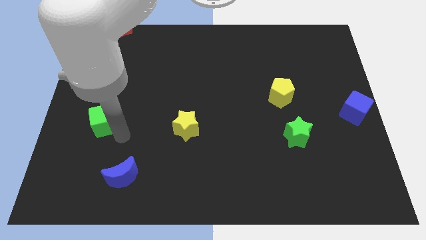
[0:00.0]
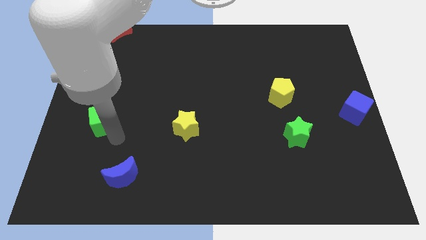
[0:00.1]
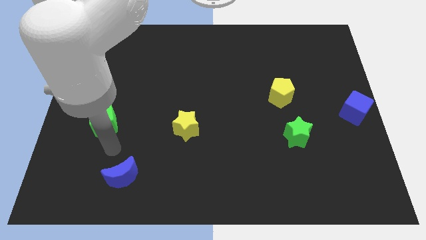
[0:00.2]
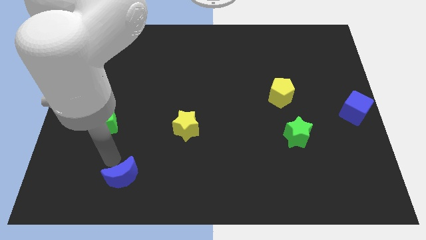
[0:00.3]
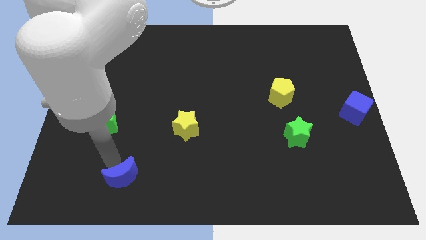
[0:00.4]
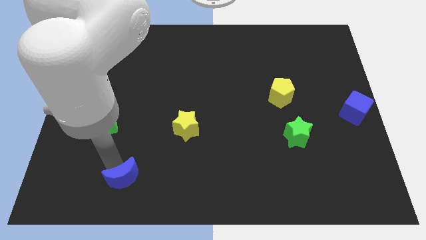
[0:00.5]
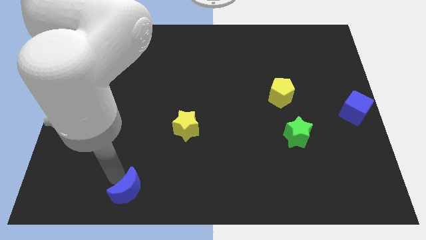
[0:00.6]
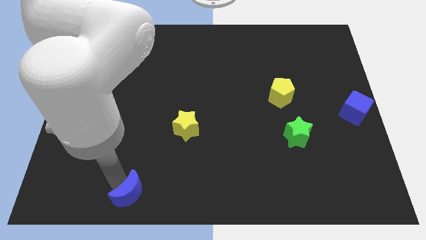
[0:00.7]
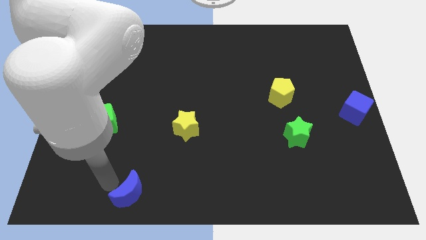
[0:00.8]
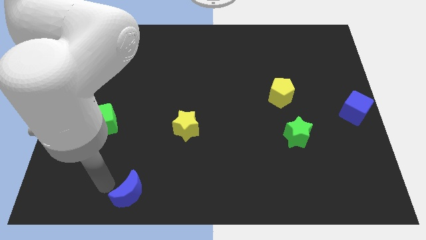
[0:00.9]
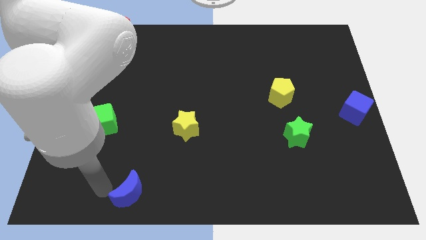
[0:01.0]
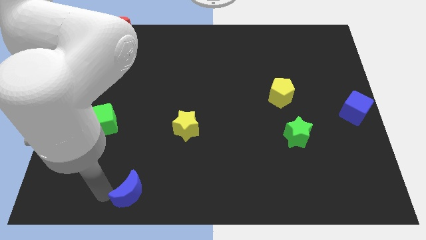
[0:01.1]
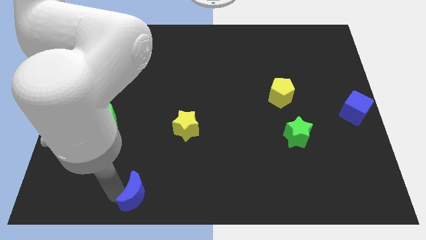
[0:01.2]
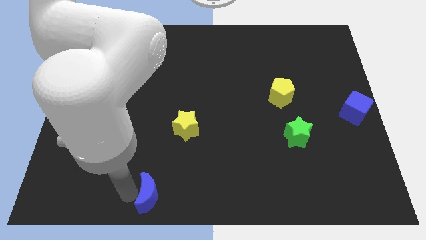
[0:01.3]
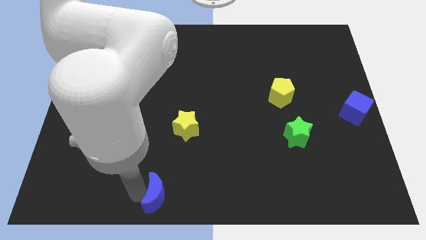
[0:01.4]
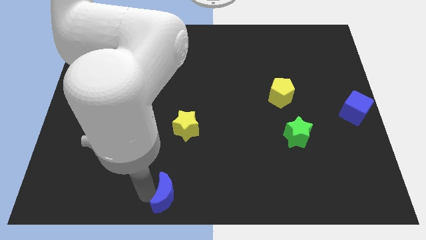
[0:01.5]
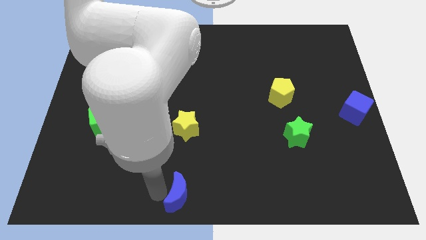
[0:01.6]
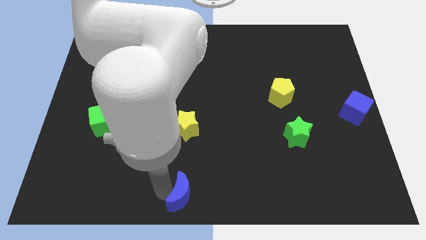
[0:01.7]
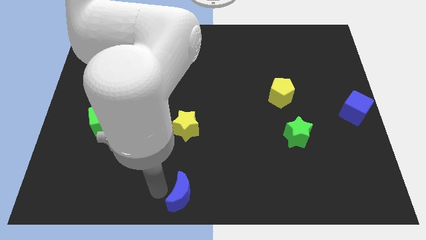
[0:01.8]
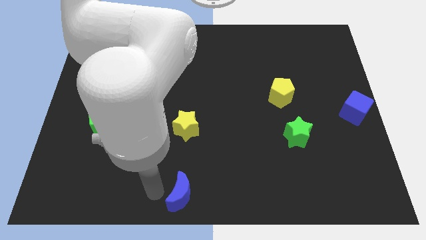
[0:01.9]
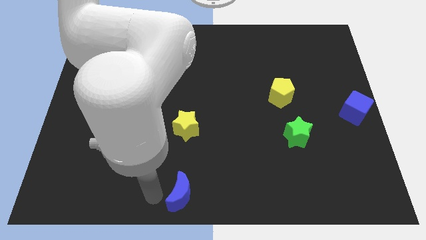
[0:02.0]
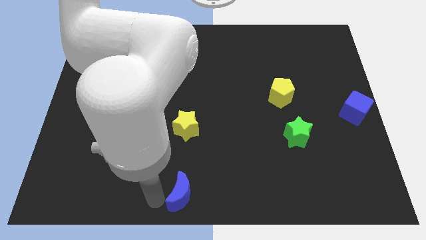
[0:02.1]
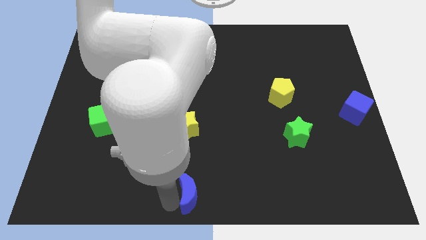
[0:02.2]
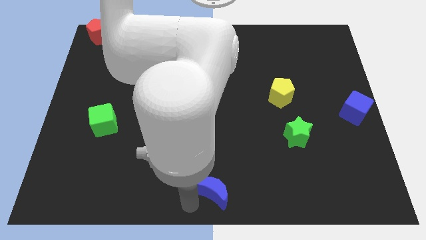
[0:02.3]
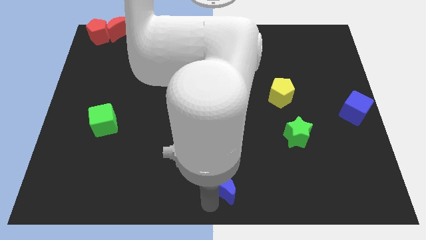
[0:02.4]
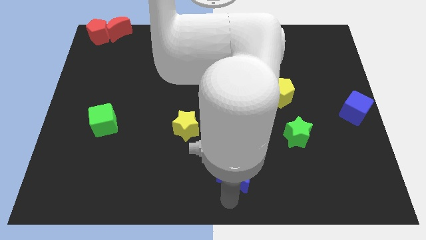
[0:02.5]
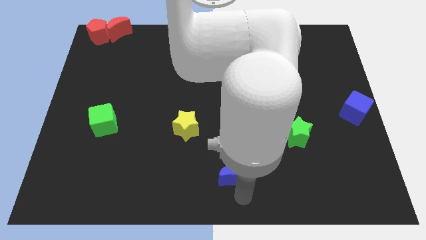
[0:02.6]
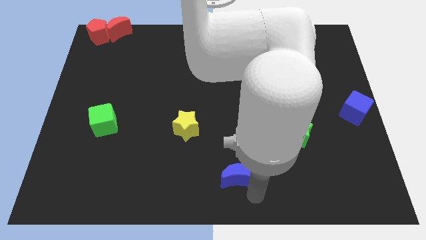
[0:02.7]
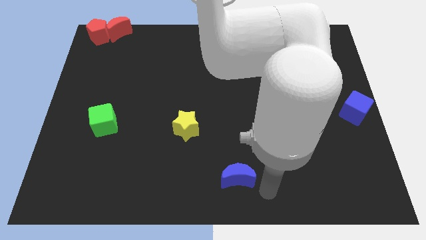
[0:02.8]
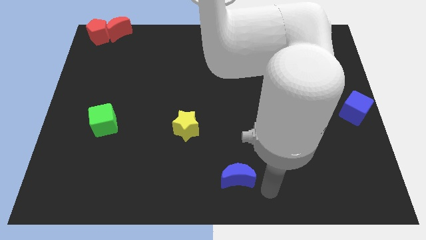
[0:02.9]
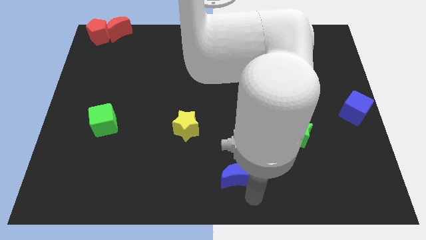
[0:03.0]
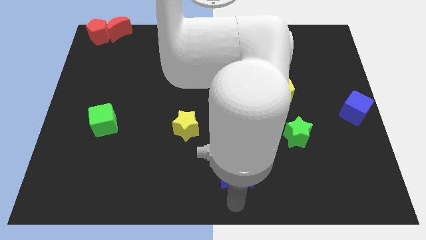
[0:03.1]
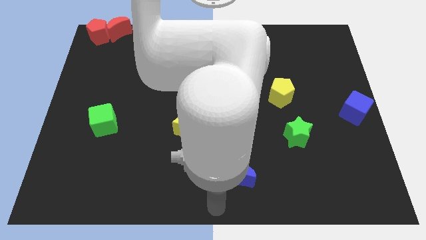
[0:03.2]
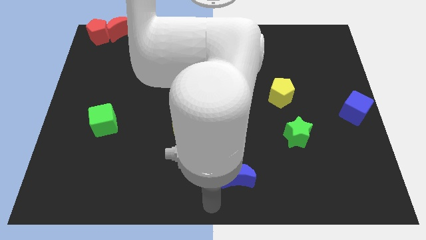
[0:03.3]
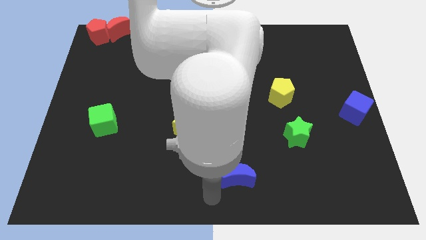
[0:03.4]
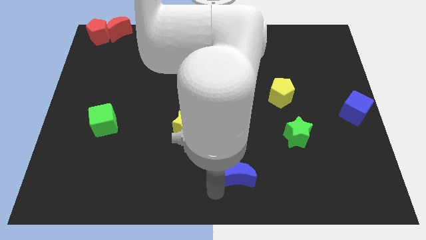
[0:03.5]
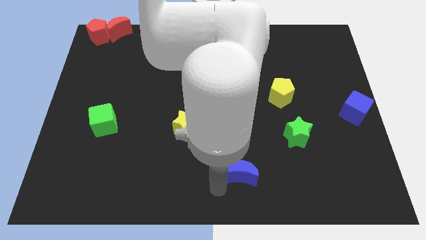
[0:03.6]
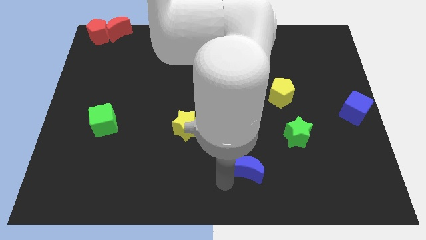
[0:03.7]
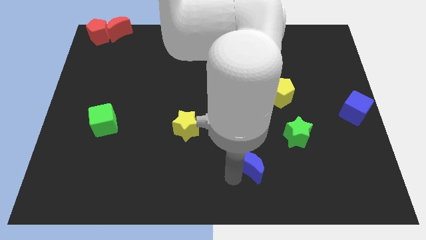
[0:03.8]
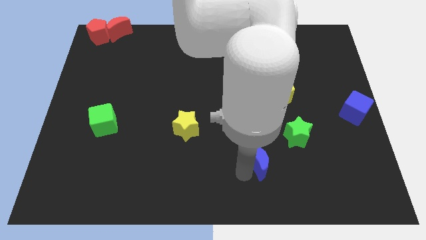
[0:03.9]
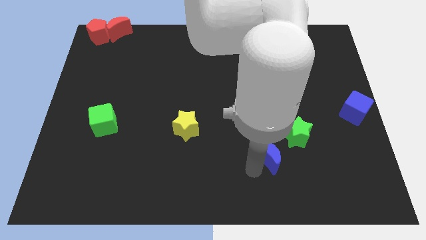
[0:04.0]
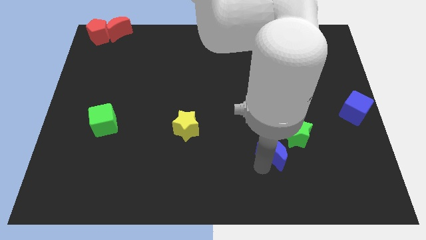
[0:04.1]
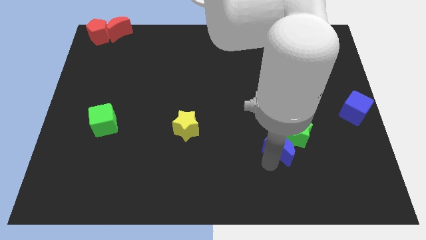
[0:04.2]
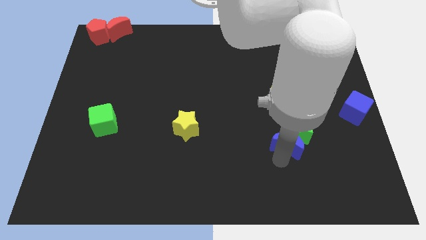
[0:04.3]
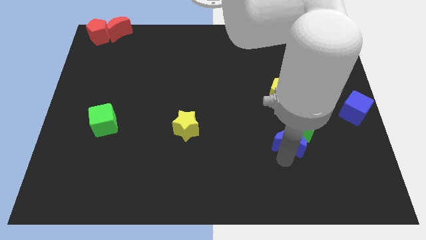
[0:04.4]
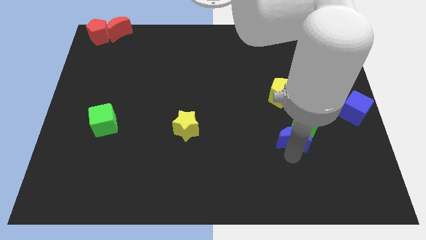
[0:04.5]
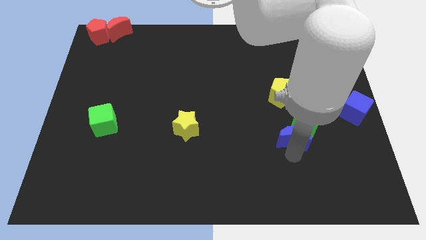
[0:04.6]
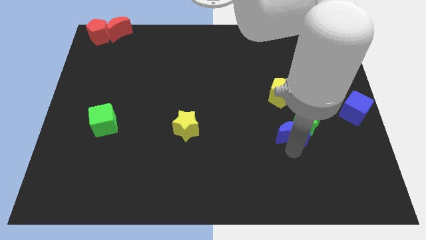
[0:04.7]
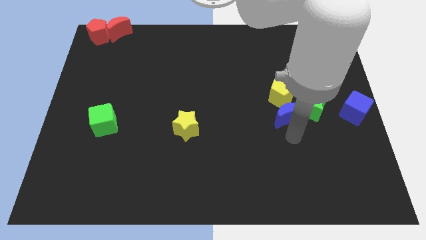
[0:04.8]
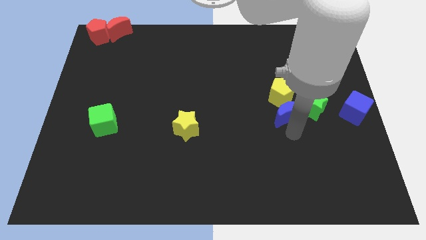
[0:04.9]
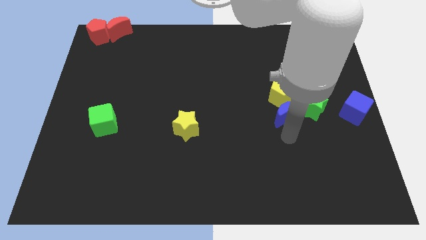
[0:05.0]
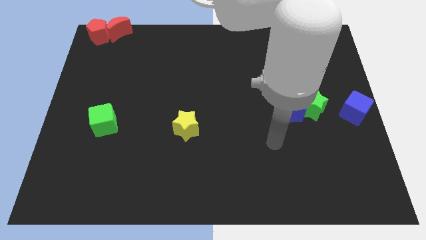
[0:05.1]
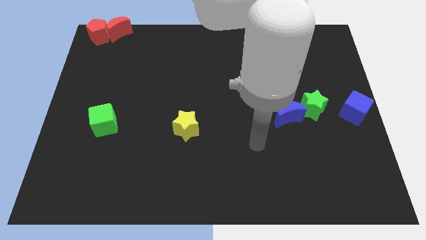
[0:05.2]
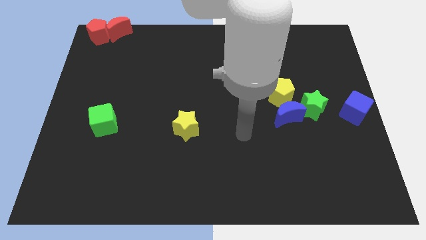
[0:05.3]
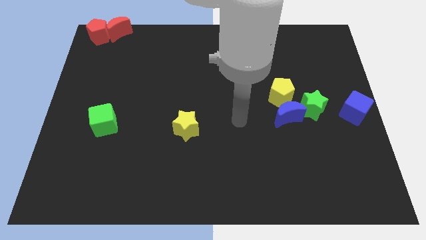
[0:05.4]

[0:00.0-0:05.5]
push the blue moon to the bottom side of the yellow pentagon

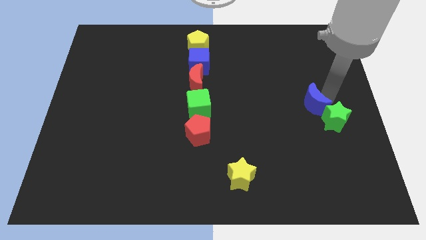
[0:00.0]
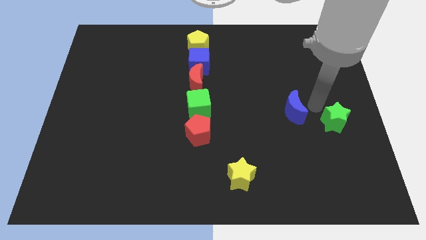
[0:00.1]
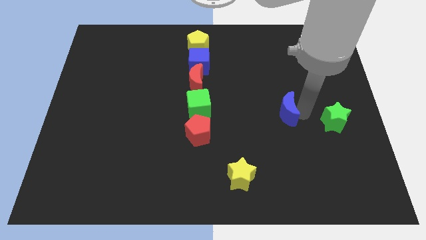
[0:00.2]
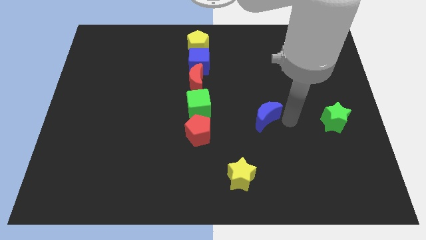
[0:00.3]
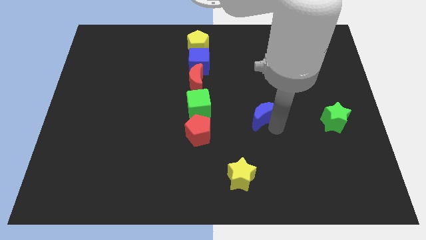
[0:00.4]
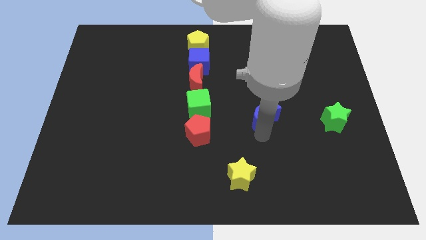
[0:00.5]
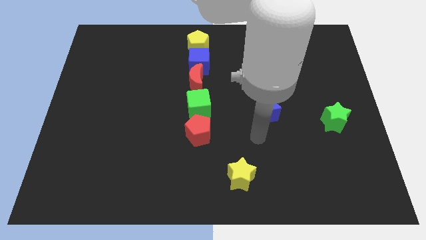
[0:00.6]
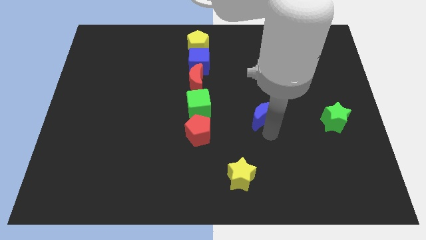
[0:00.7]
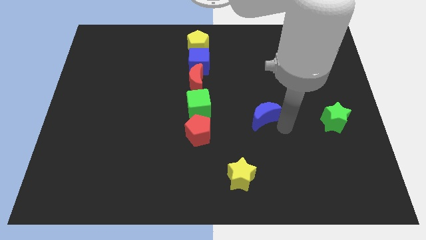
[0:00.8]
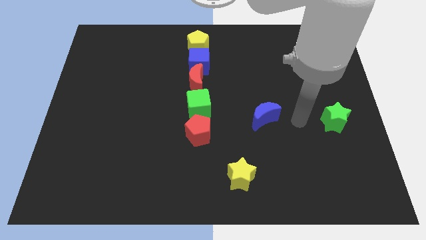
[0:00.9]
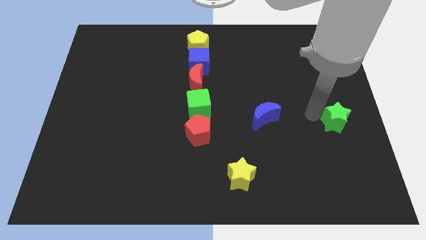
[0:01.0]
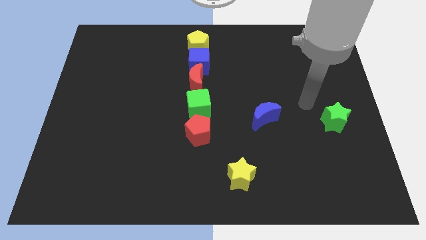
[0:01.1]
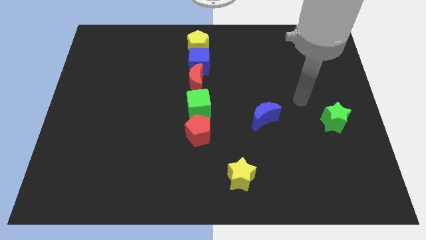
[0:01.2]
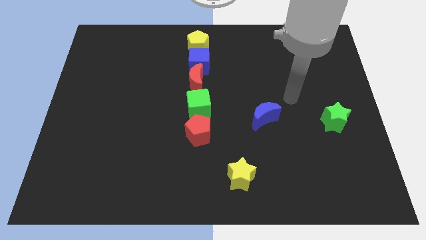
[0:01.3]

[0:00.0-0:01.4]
separate the blue moon from the green star

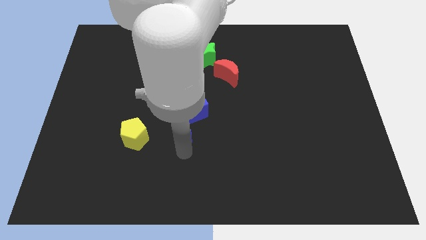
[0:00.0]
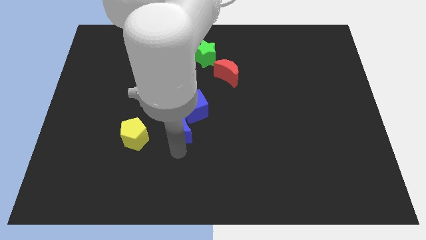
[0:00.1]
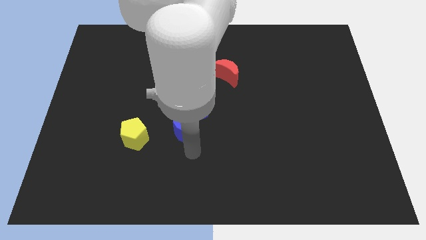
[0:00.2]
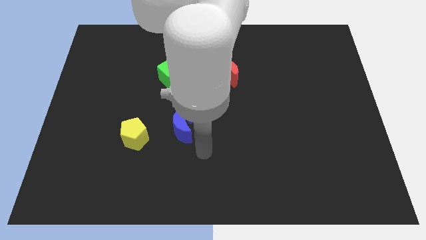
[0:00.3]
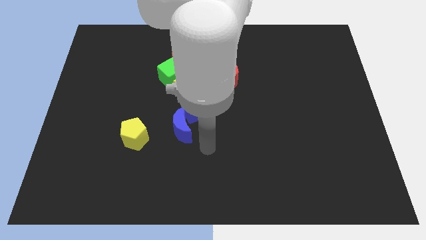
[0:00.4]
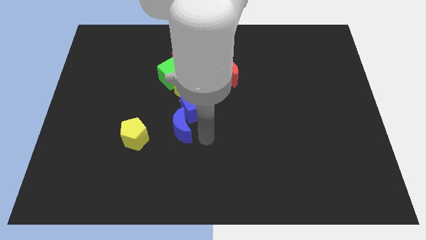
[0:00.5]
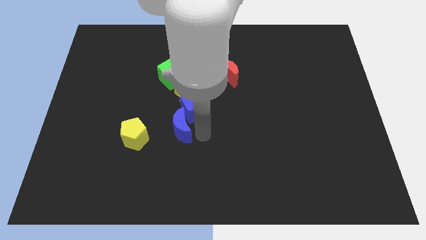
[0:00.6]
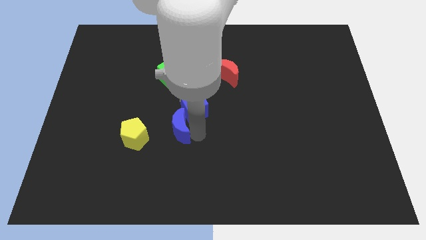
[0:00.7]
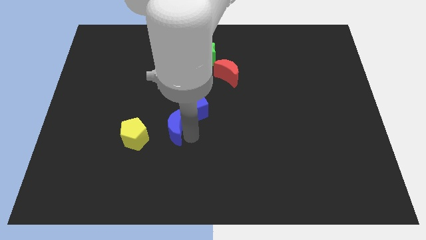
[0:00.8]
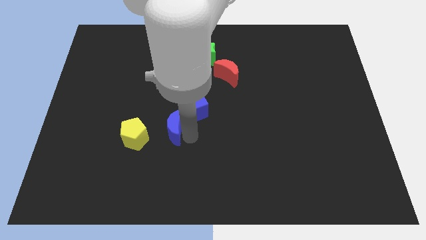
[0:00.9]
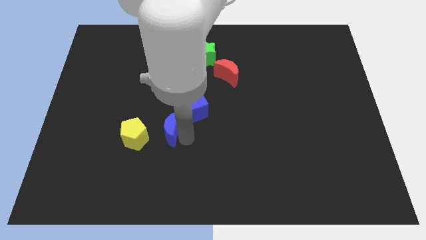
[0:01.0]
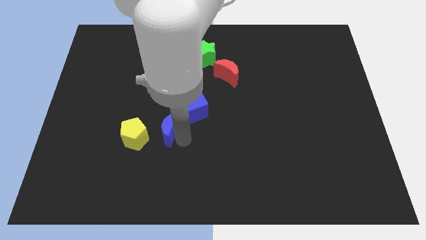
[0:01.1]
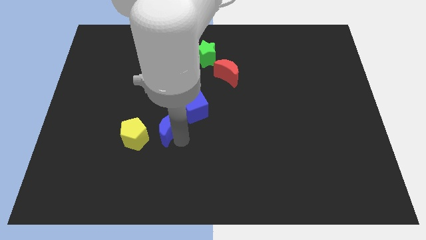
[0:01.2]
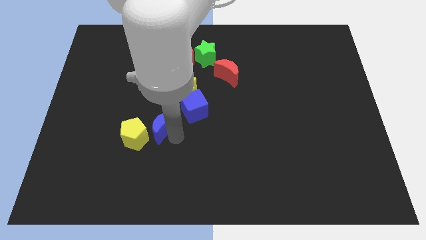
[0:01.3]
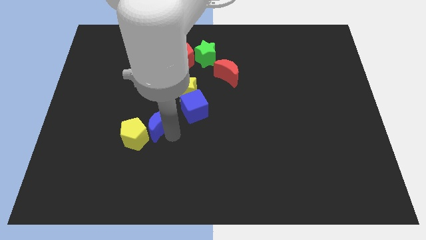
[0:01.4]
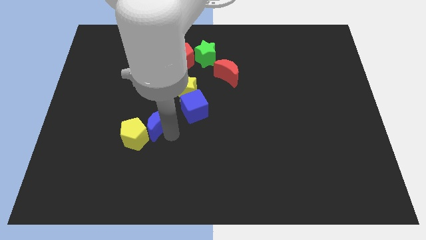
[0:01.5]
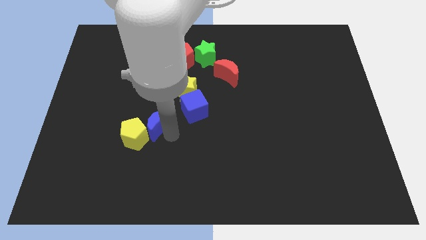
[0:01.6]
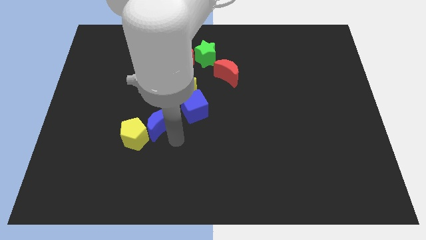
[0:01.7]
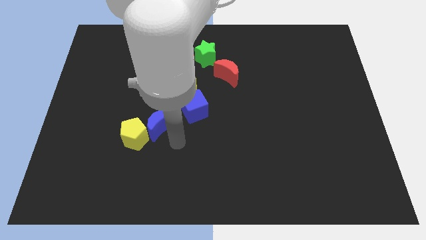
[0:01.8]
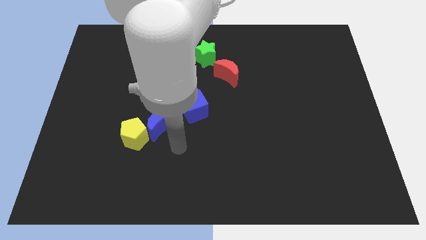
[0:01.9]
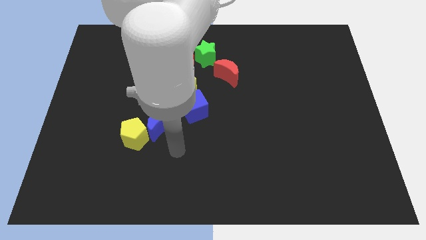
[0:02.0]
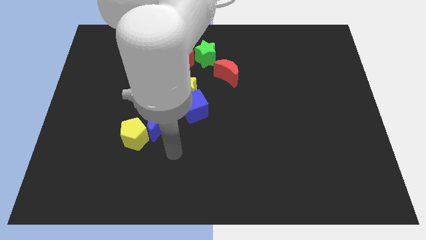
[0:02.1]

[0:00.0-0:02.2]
place the blue moon in between the blue cube and yellow pentagon
